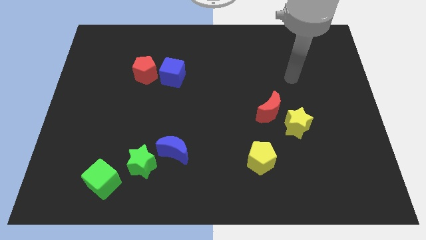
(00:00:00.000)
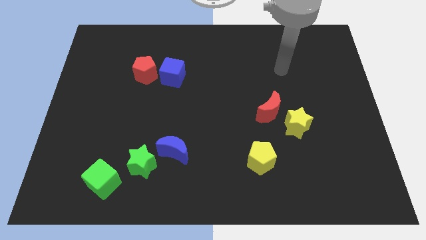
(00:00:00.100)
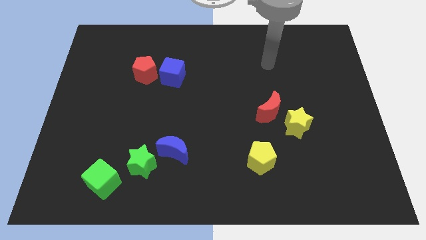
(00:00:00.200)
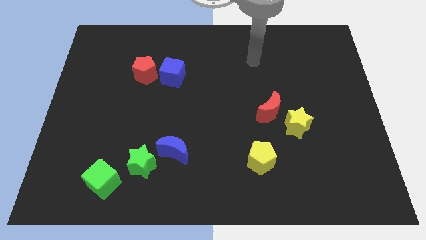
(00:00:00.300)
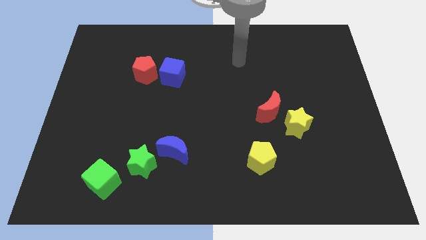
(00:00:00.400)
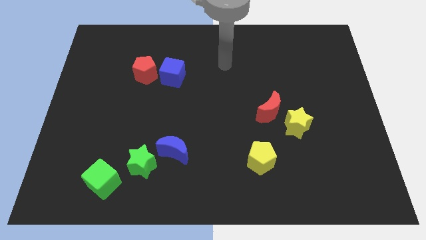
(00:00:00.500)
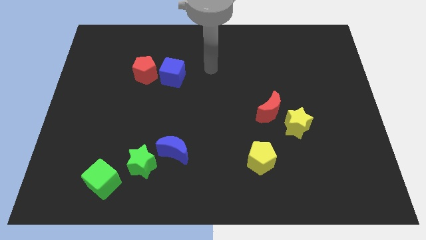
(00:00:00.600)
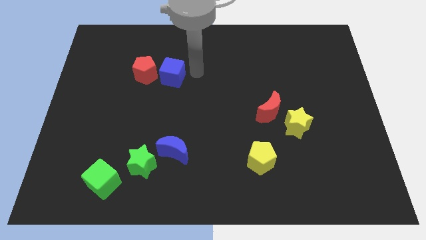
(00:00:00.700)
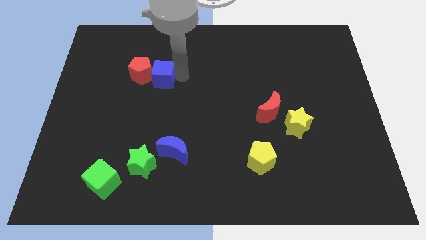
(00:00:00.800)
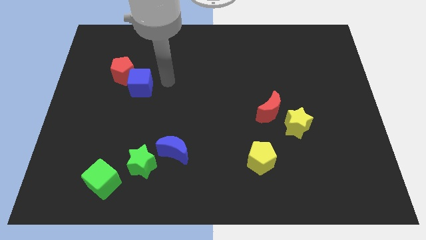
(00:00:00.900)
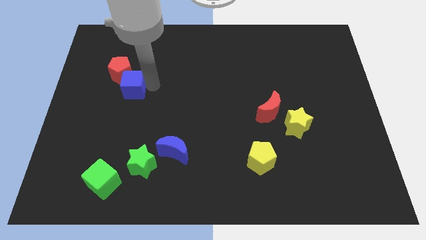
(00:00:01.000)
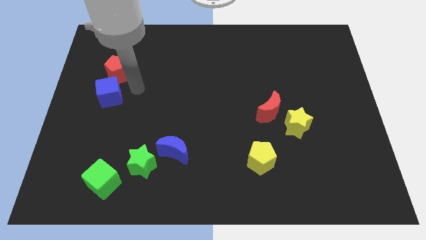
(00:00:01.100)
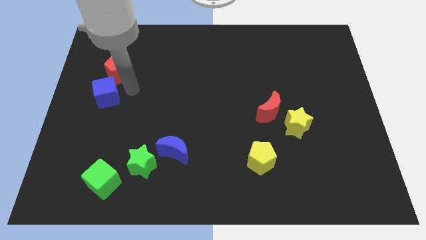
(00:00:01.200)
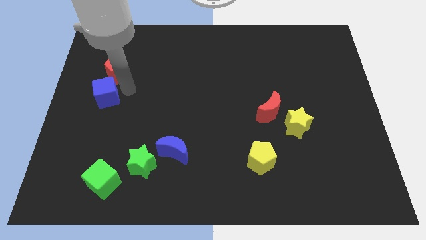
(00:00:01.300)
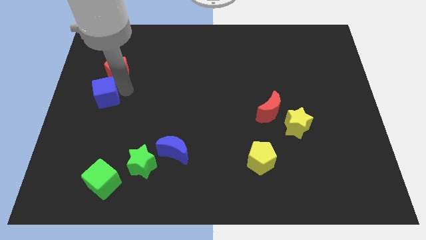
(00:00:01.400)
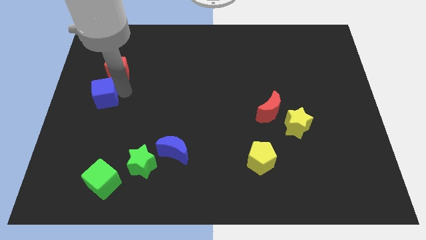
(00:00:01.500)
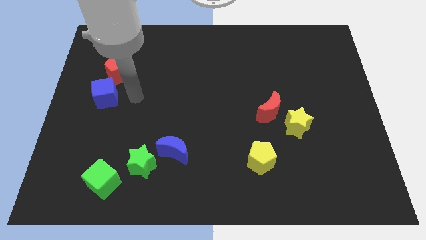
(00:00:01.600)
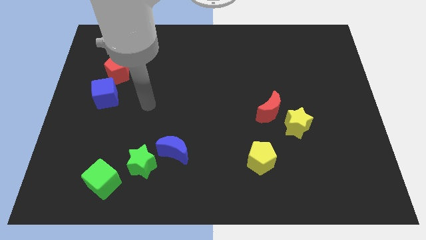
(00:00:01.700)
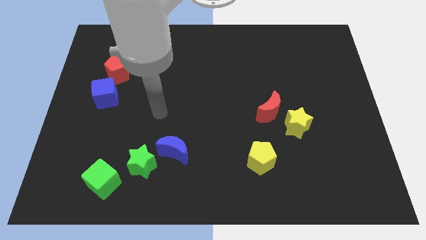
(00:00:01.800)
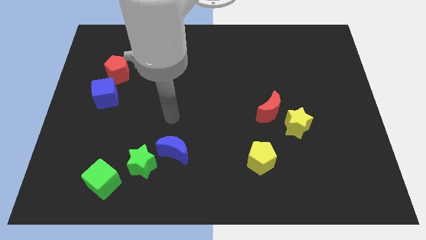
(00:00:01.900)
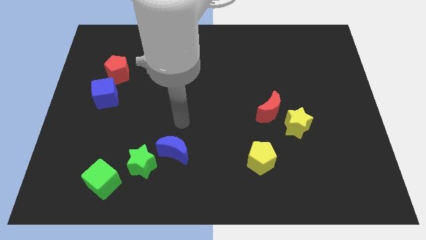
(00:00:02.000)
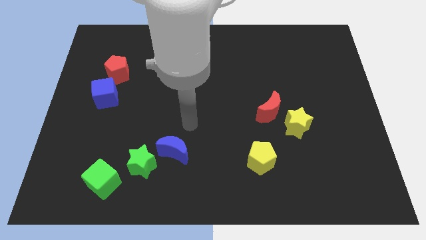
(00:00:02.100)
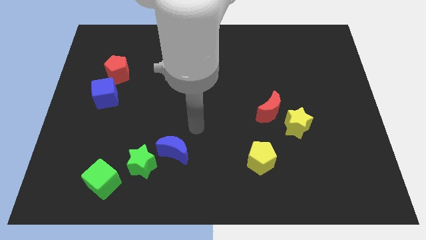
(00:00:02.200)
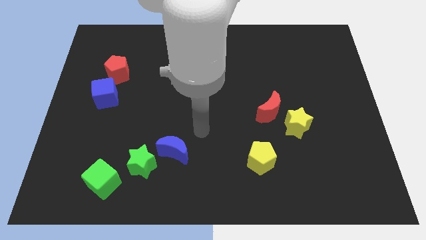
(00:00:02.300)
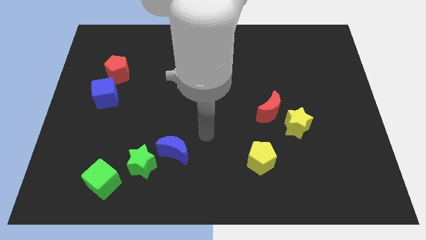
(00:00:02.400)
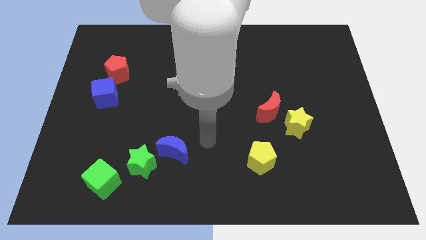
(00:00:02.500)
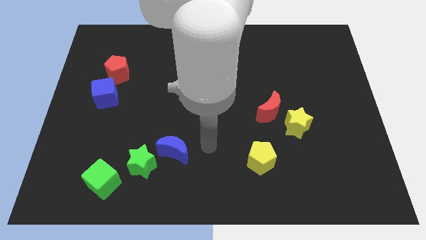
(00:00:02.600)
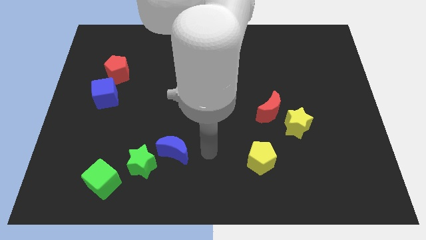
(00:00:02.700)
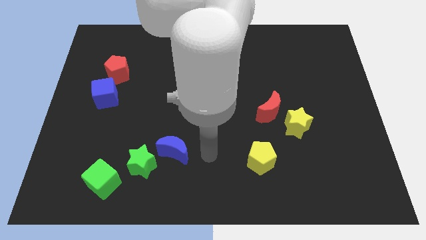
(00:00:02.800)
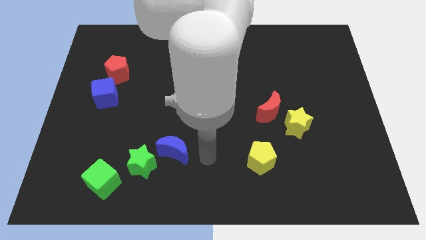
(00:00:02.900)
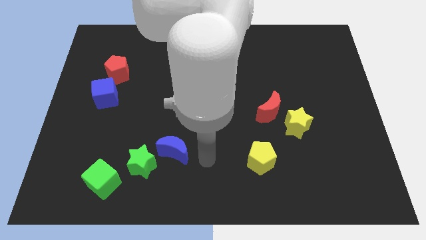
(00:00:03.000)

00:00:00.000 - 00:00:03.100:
push the blue cube towards the center left of the board

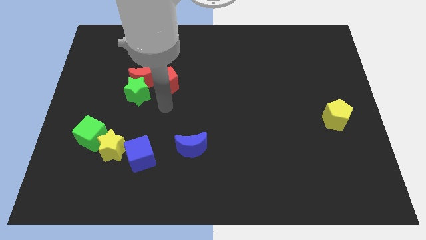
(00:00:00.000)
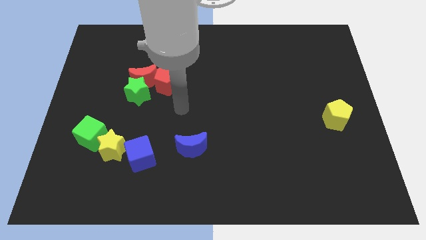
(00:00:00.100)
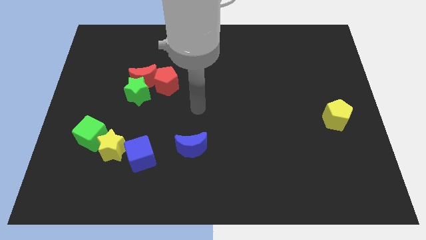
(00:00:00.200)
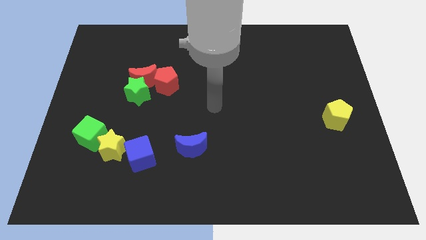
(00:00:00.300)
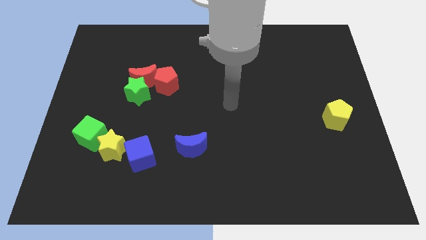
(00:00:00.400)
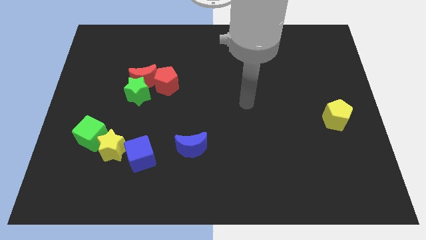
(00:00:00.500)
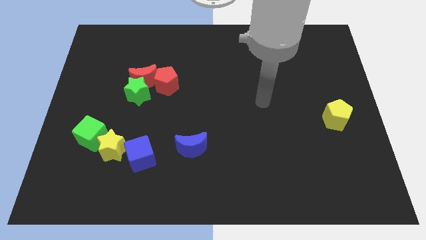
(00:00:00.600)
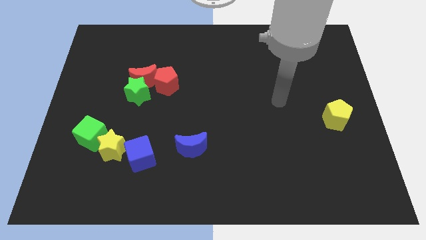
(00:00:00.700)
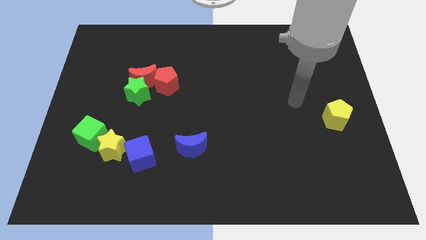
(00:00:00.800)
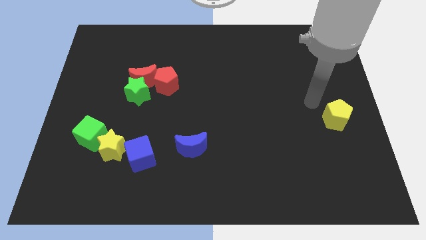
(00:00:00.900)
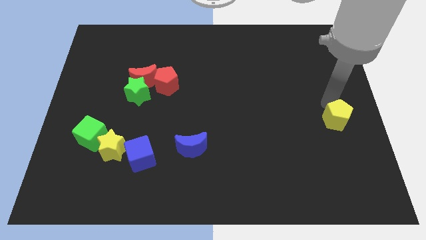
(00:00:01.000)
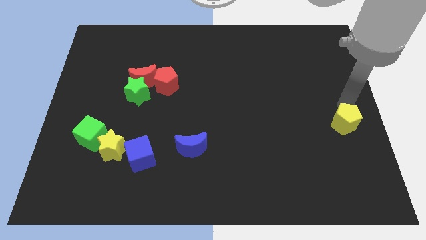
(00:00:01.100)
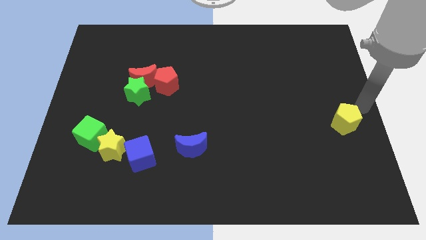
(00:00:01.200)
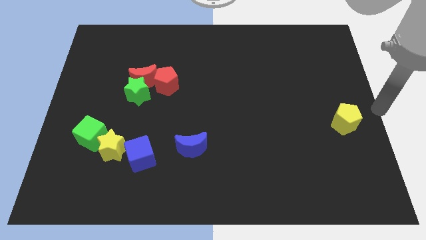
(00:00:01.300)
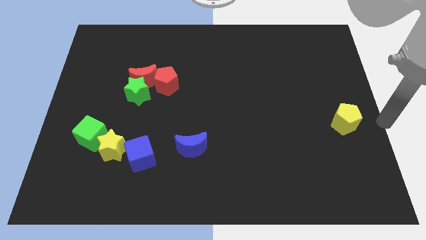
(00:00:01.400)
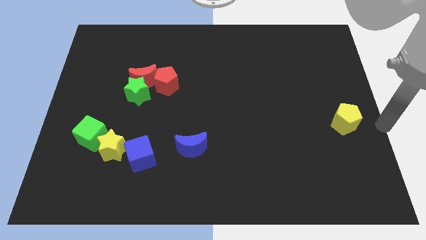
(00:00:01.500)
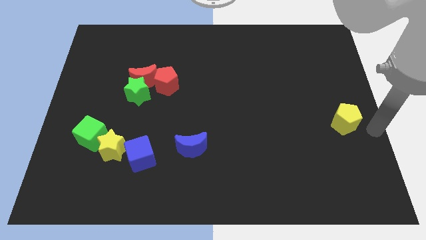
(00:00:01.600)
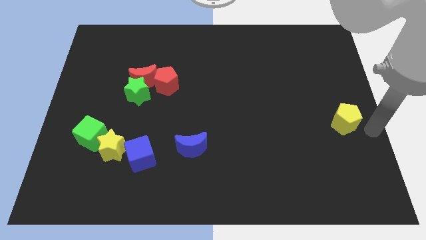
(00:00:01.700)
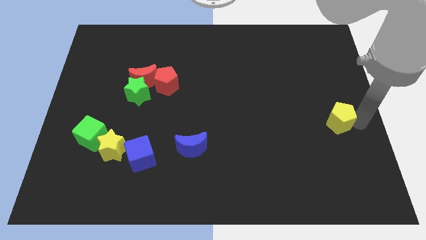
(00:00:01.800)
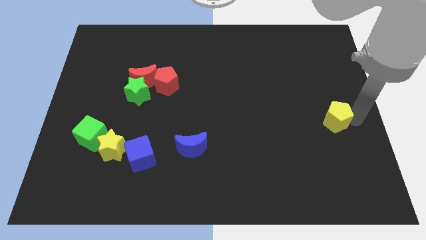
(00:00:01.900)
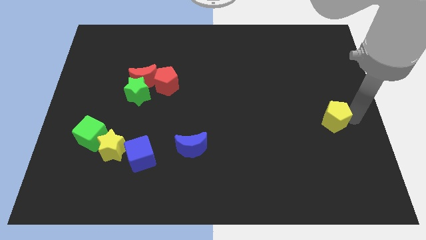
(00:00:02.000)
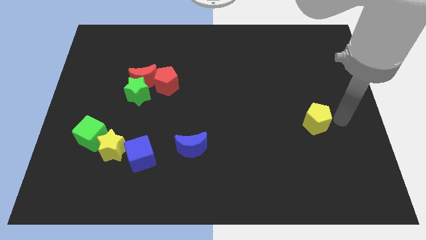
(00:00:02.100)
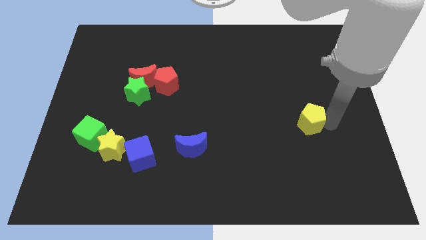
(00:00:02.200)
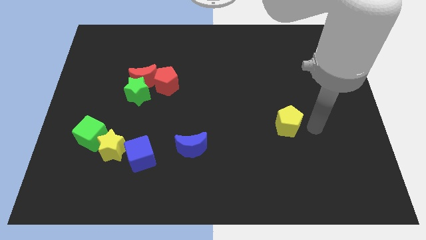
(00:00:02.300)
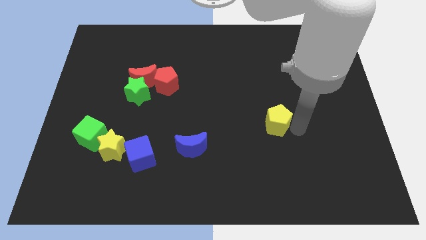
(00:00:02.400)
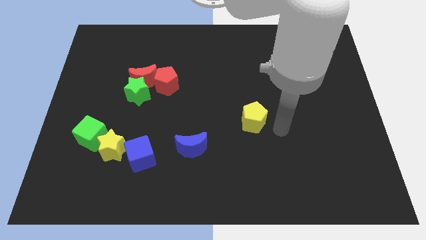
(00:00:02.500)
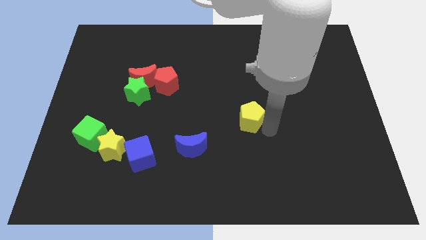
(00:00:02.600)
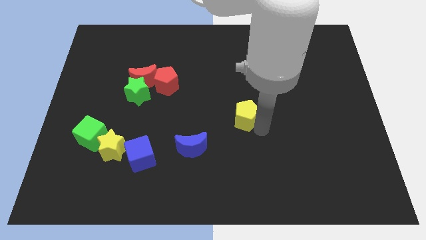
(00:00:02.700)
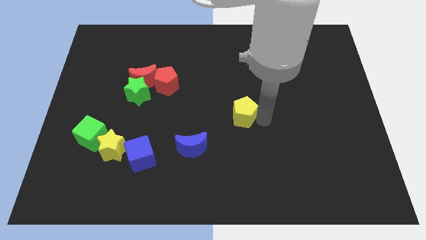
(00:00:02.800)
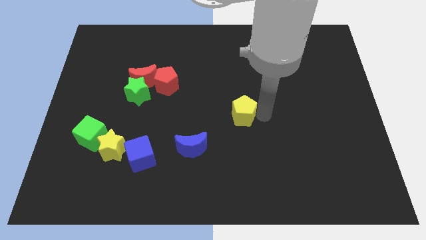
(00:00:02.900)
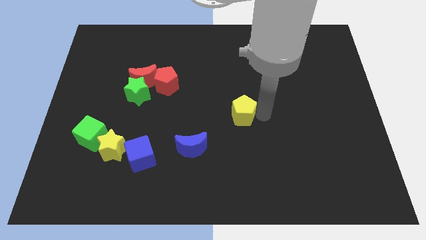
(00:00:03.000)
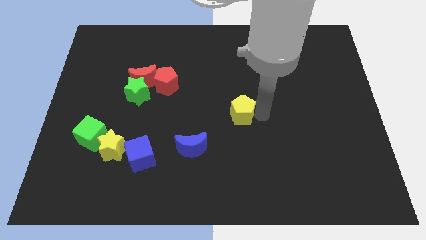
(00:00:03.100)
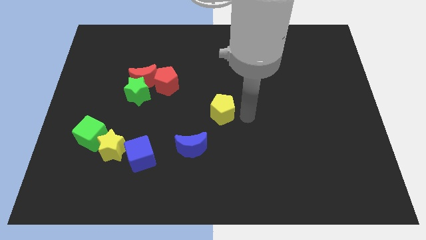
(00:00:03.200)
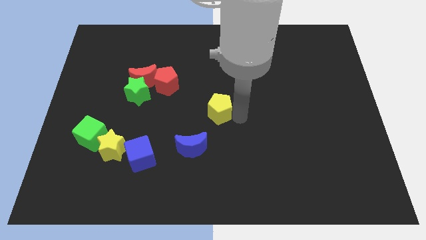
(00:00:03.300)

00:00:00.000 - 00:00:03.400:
place the yellow pentagon to the center of the board

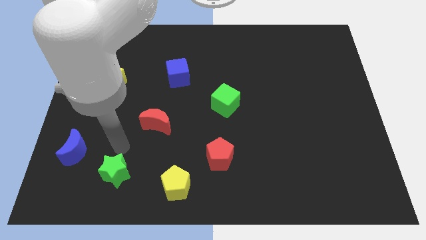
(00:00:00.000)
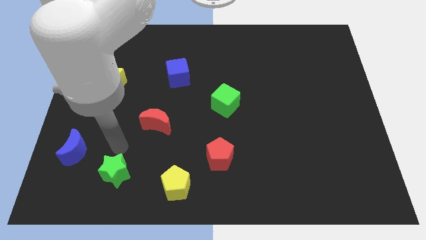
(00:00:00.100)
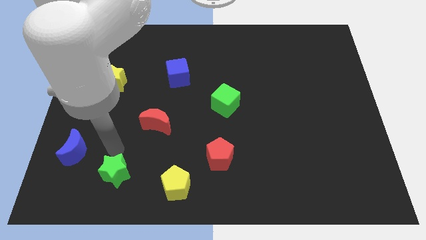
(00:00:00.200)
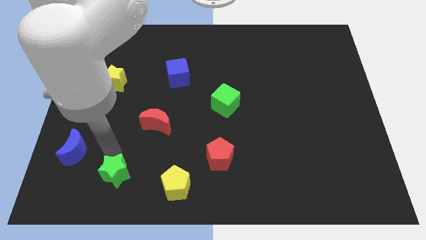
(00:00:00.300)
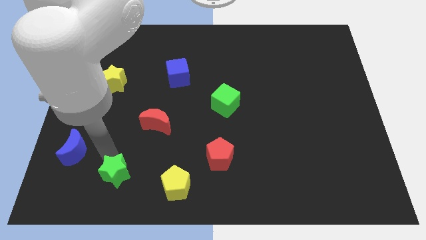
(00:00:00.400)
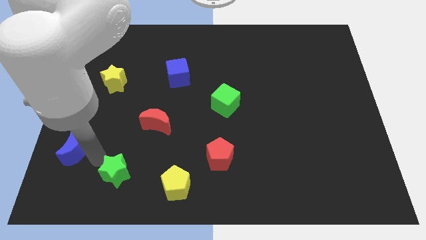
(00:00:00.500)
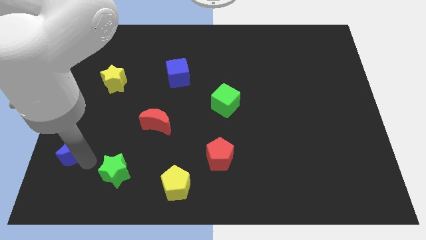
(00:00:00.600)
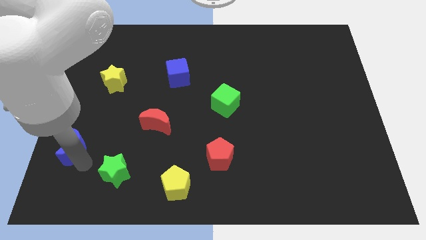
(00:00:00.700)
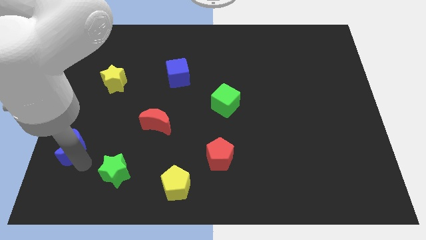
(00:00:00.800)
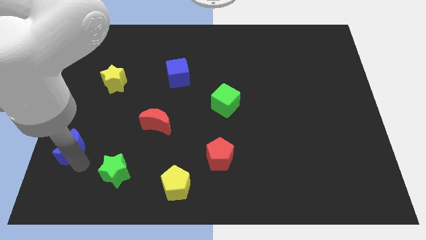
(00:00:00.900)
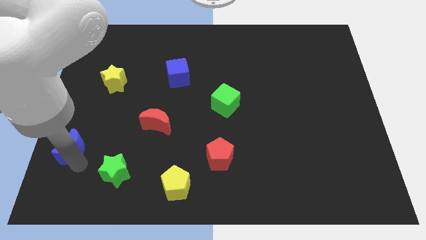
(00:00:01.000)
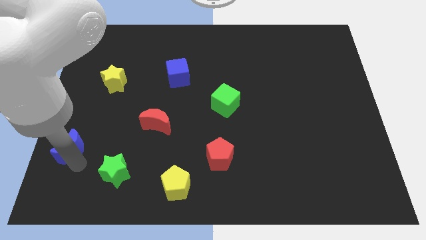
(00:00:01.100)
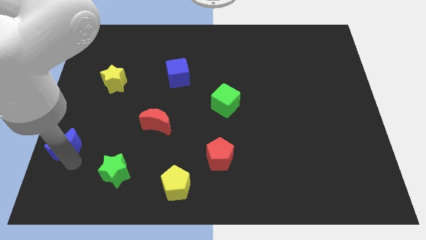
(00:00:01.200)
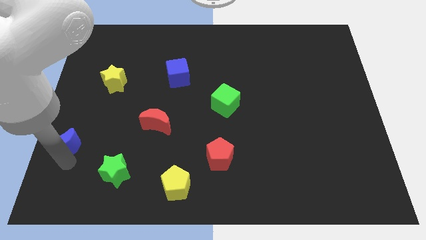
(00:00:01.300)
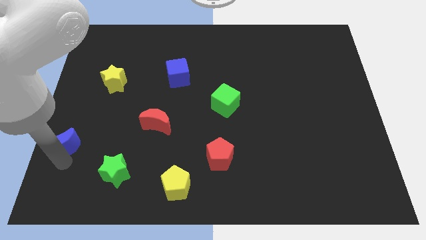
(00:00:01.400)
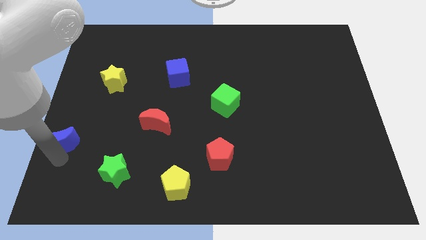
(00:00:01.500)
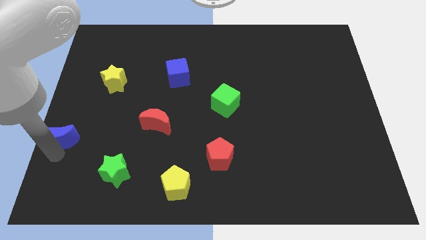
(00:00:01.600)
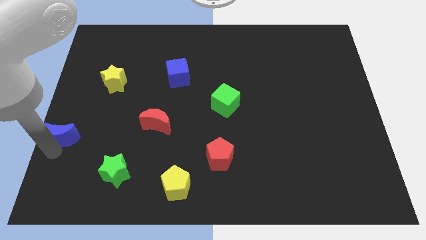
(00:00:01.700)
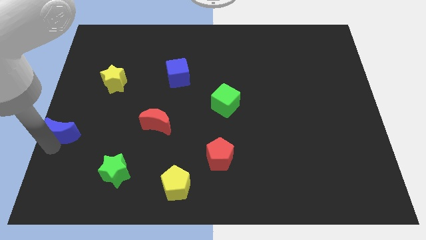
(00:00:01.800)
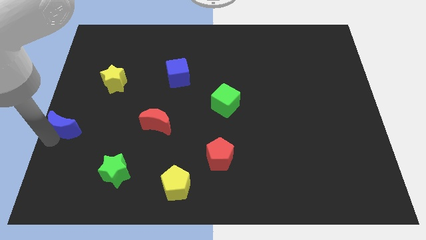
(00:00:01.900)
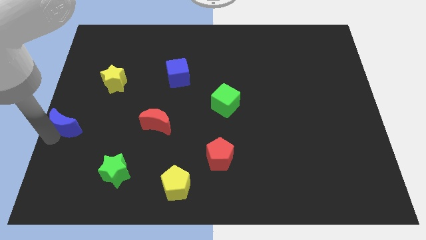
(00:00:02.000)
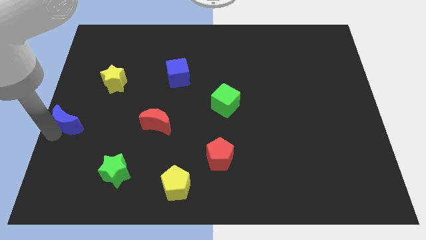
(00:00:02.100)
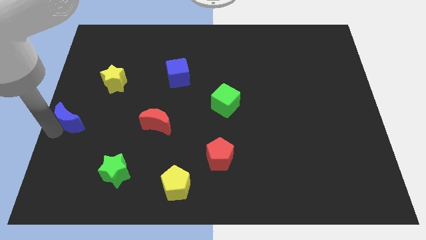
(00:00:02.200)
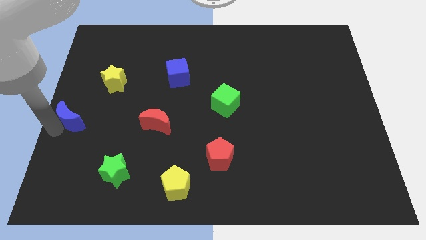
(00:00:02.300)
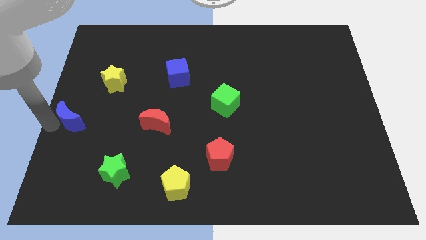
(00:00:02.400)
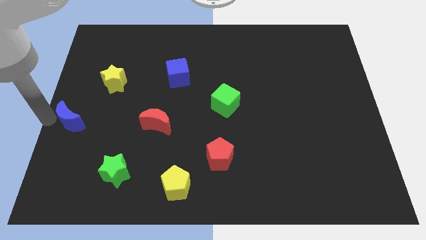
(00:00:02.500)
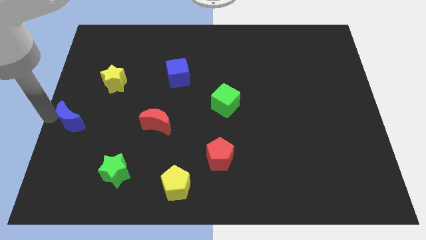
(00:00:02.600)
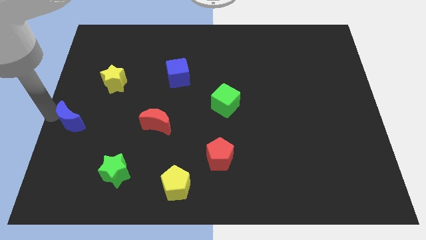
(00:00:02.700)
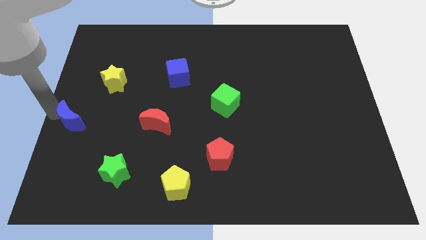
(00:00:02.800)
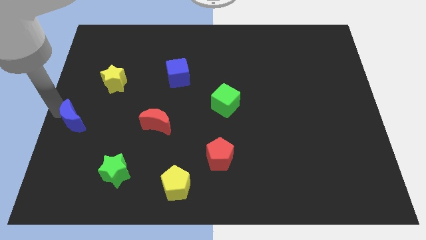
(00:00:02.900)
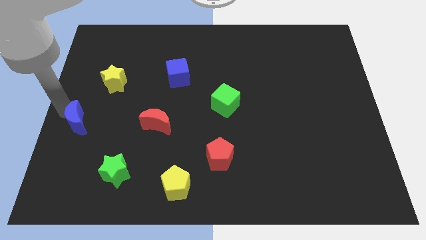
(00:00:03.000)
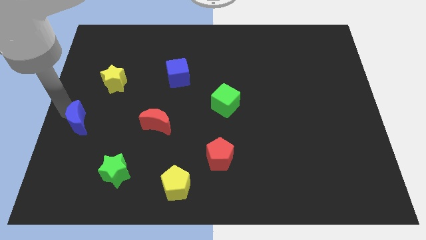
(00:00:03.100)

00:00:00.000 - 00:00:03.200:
place blue moon at the center left
